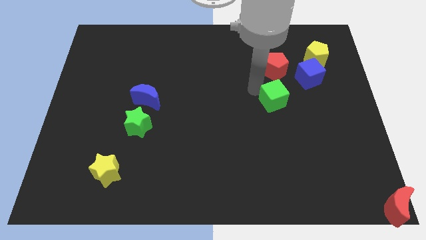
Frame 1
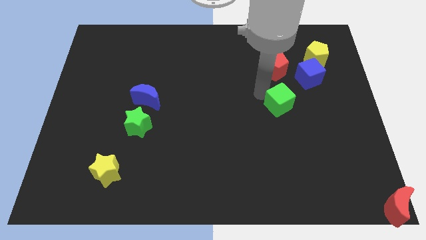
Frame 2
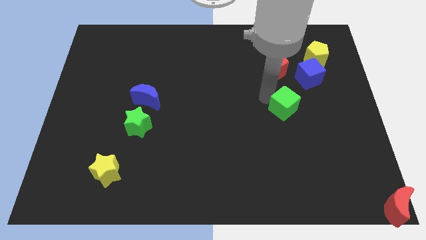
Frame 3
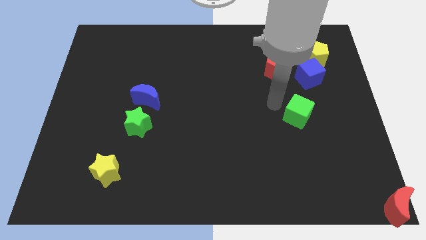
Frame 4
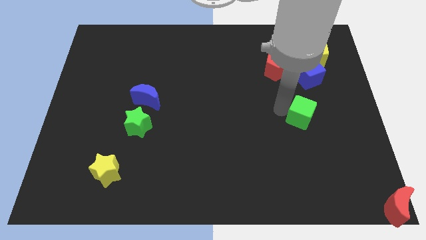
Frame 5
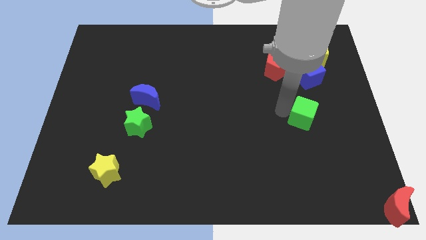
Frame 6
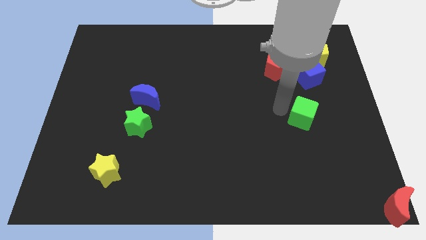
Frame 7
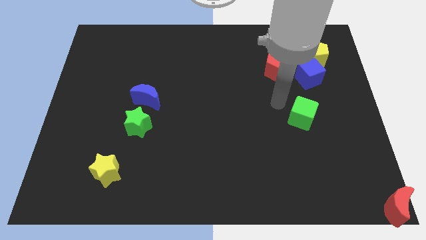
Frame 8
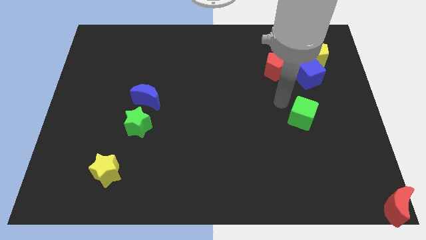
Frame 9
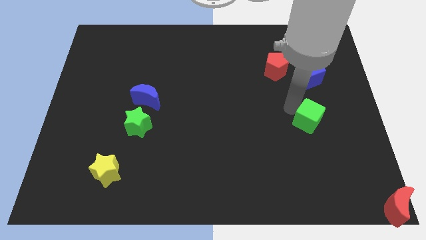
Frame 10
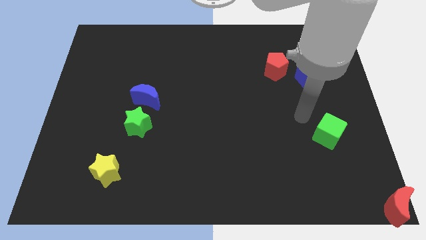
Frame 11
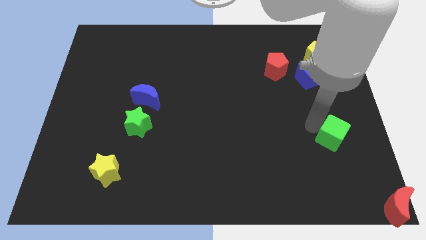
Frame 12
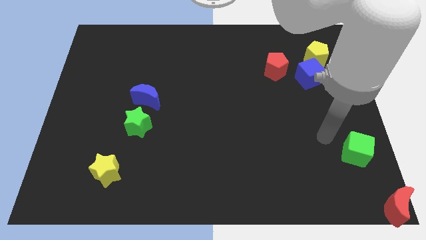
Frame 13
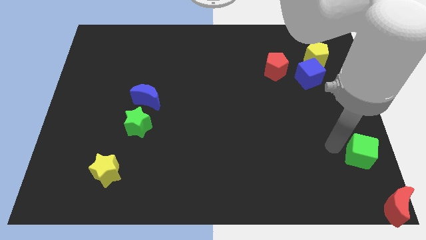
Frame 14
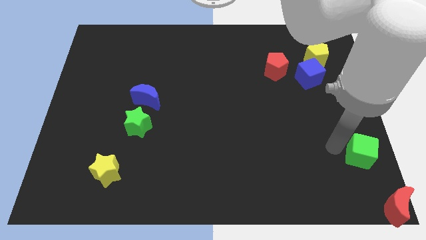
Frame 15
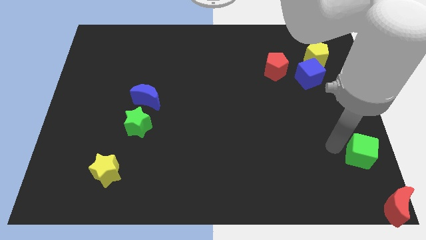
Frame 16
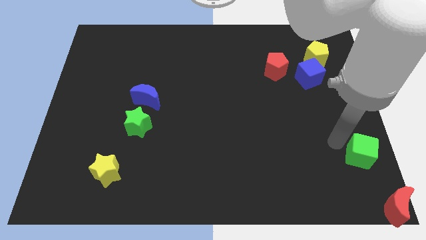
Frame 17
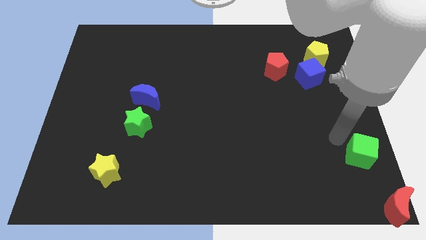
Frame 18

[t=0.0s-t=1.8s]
push the green cube towards the red moon

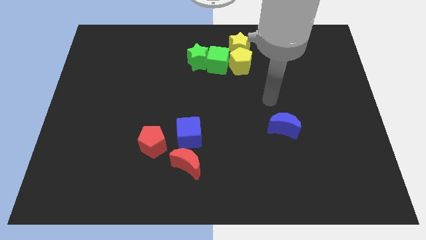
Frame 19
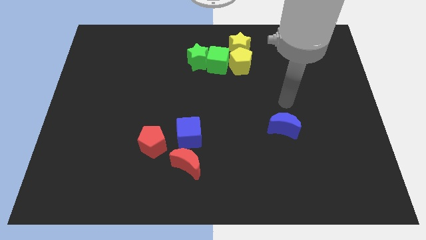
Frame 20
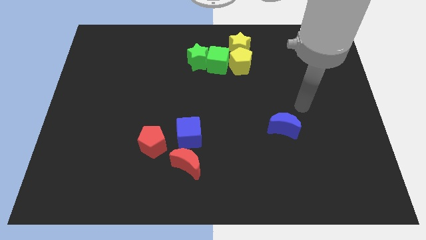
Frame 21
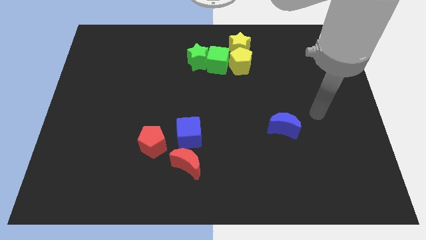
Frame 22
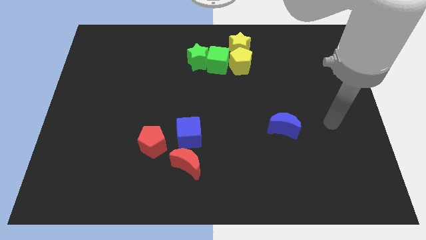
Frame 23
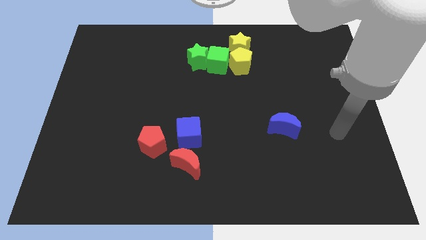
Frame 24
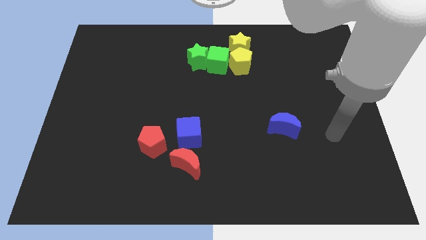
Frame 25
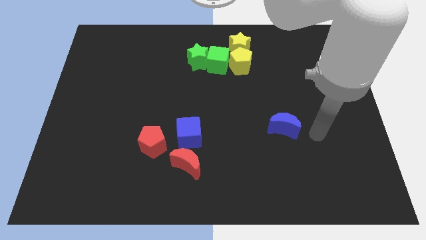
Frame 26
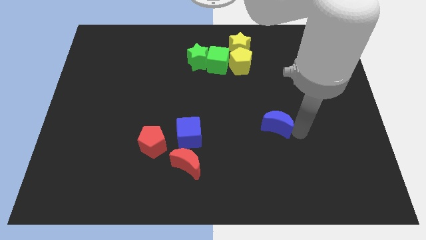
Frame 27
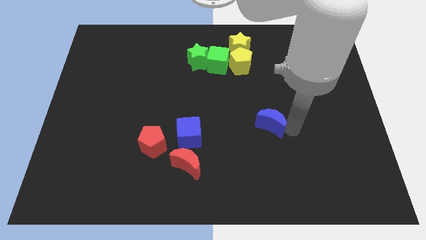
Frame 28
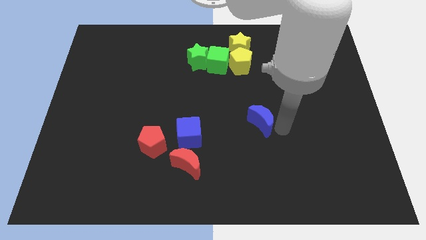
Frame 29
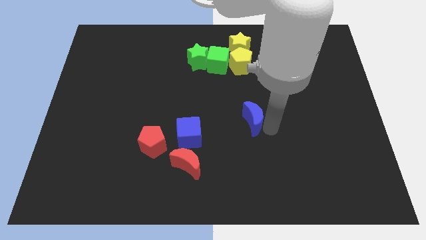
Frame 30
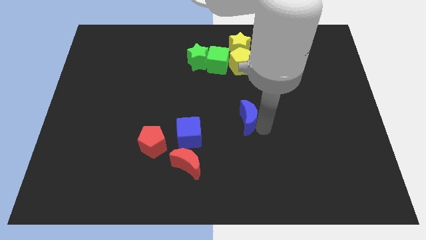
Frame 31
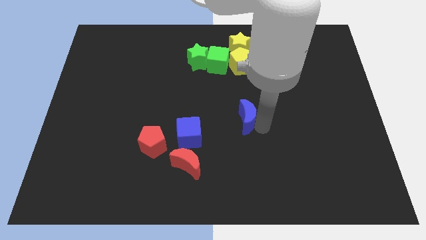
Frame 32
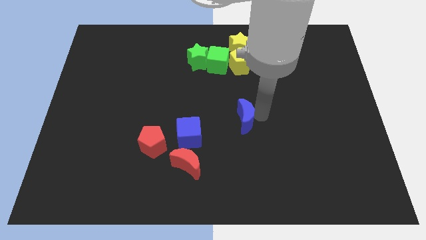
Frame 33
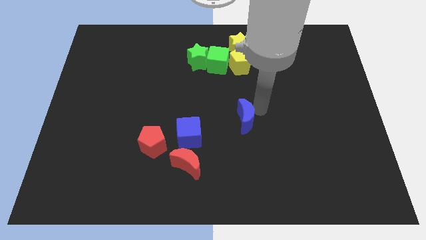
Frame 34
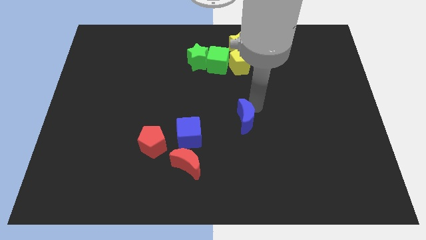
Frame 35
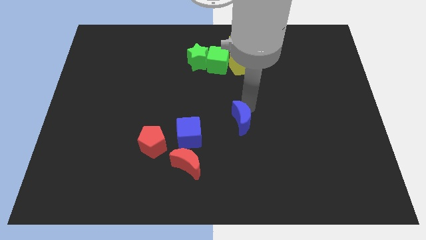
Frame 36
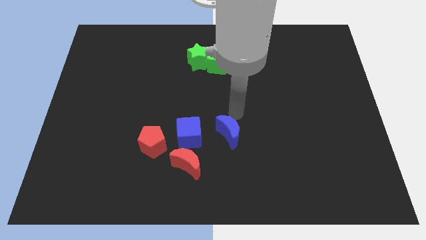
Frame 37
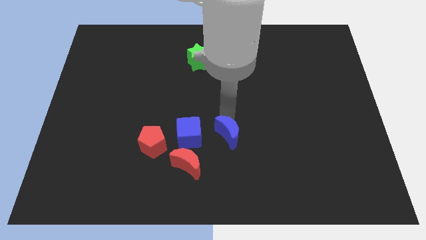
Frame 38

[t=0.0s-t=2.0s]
push the blue moon to the right of blue cube

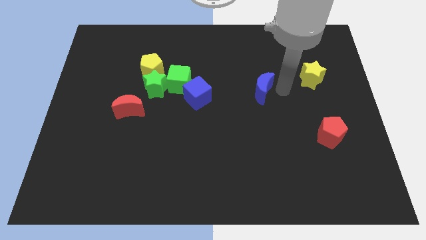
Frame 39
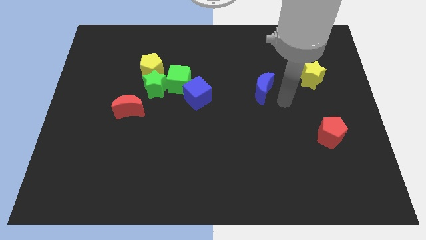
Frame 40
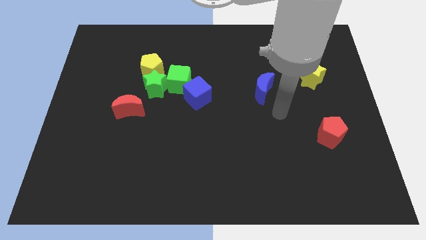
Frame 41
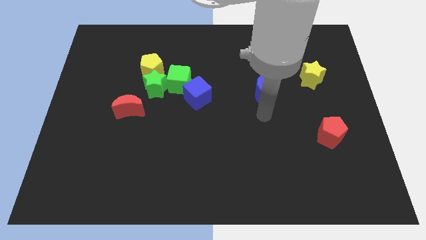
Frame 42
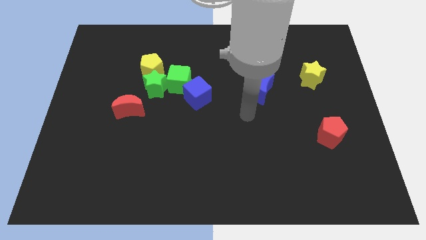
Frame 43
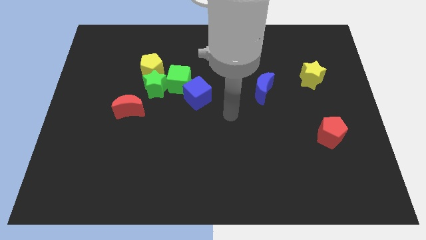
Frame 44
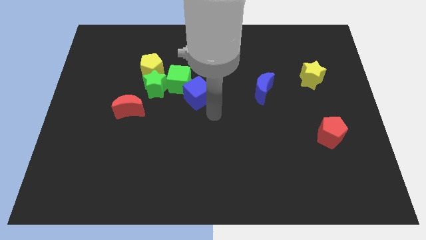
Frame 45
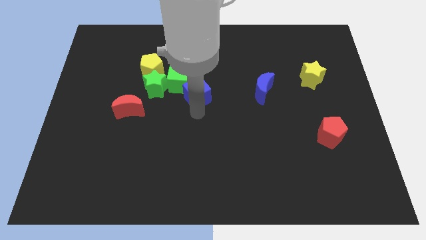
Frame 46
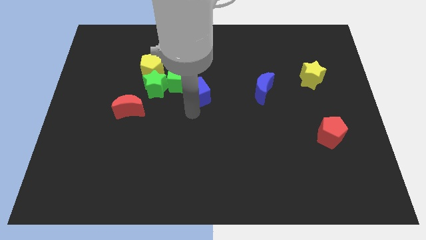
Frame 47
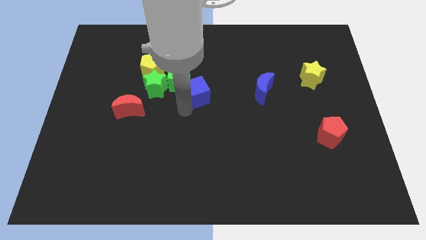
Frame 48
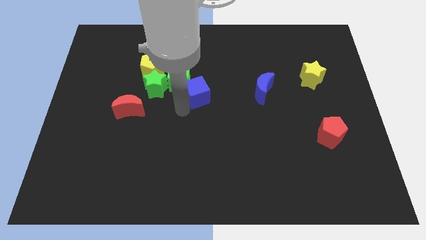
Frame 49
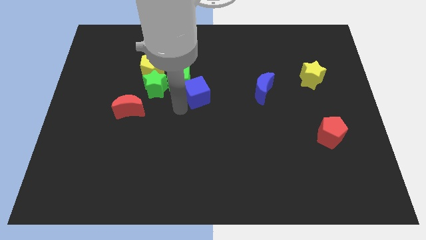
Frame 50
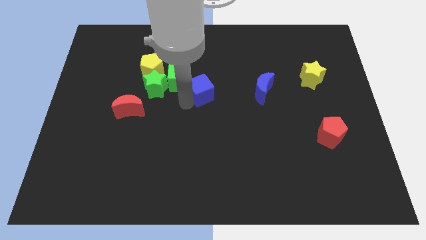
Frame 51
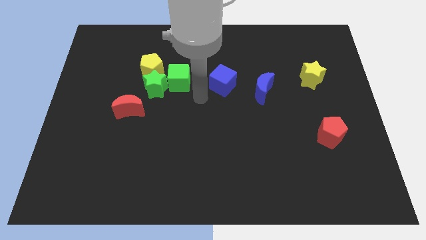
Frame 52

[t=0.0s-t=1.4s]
move the blue cube parallel to the green cube

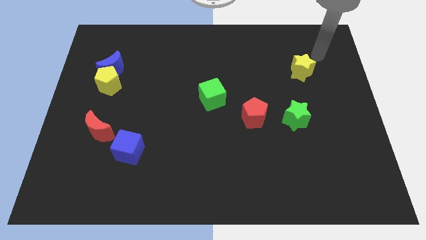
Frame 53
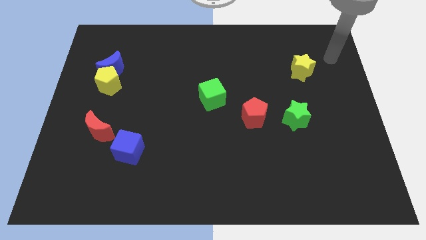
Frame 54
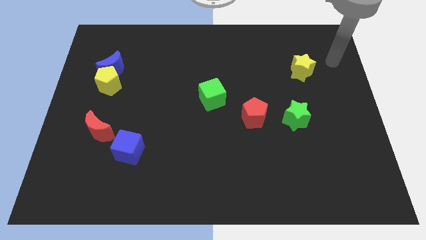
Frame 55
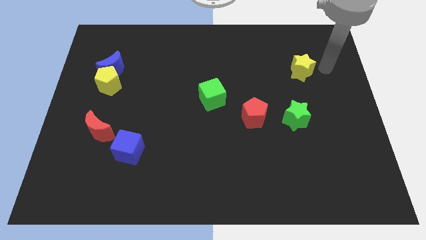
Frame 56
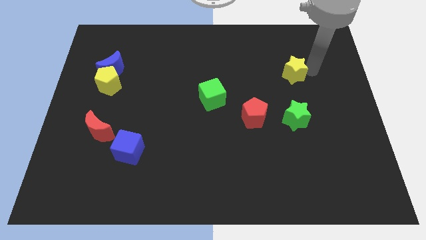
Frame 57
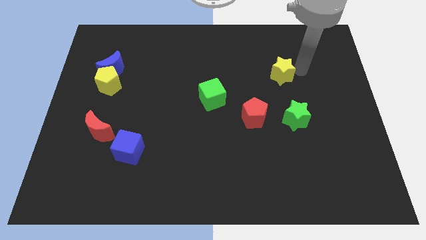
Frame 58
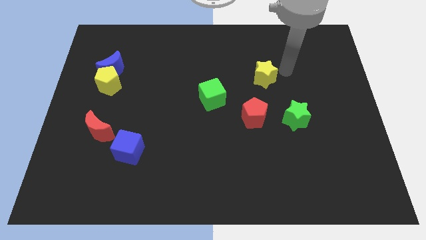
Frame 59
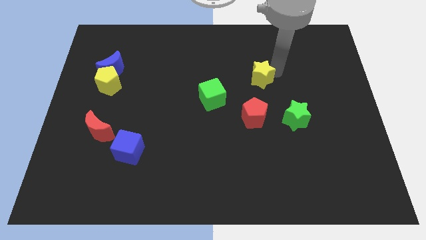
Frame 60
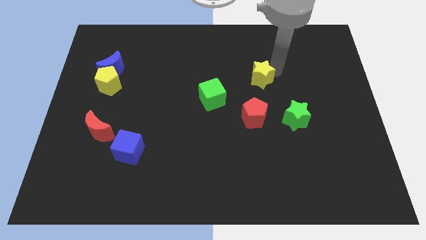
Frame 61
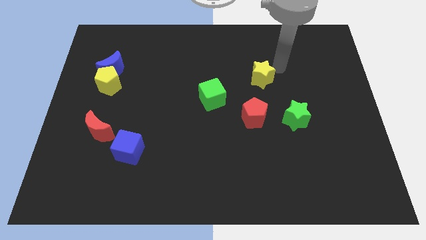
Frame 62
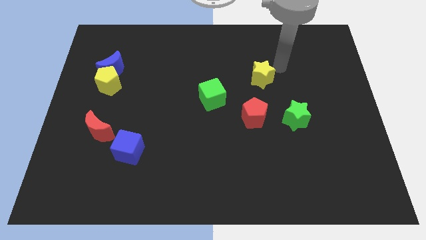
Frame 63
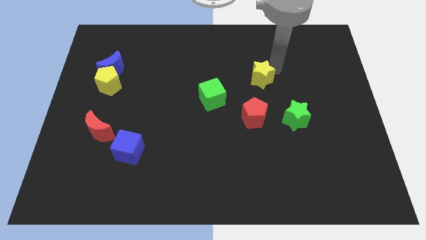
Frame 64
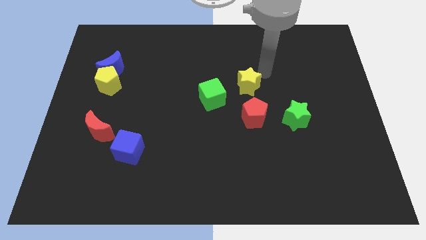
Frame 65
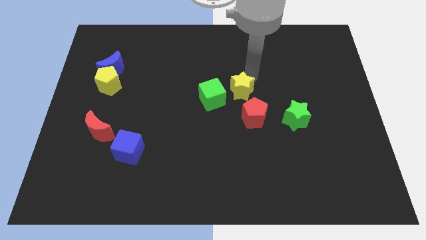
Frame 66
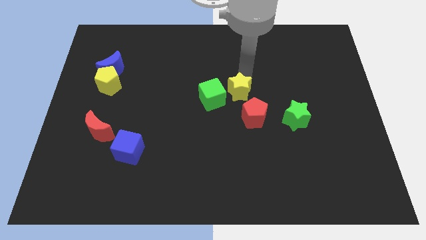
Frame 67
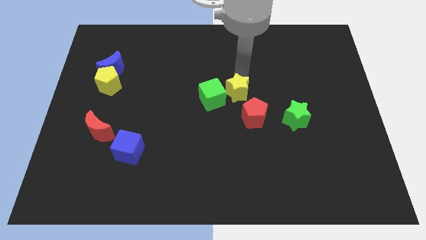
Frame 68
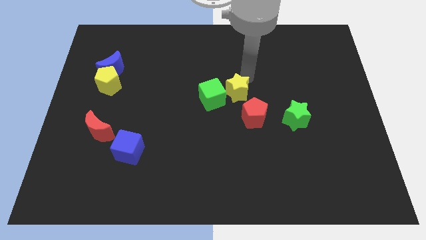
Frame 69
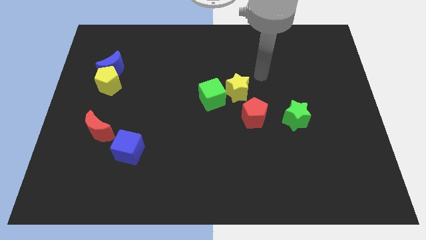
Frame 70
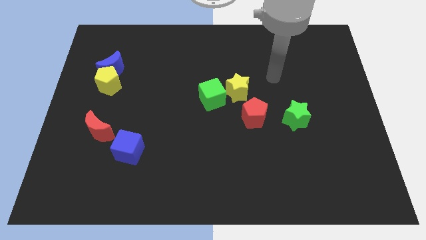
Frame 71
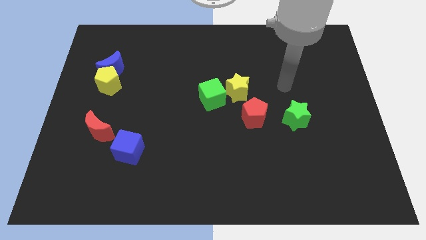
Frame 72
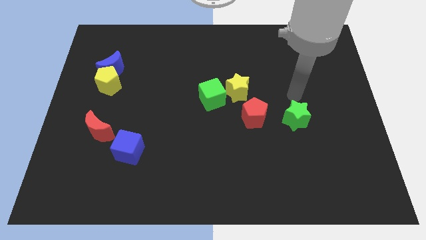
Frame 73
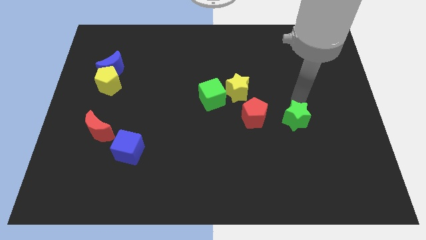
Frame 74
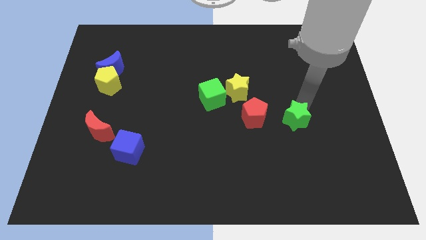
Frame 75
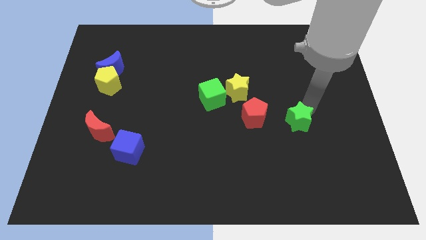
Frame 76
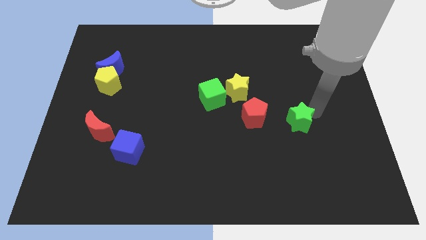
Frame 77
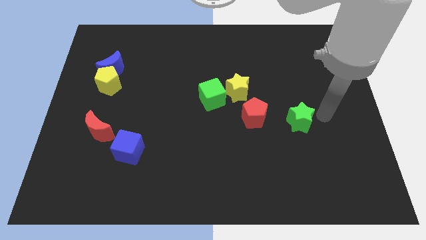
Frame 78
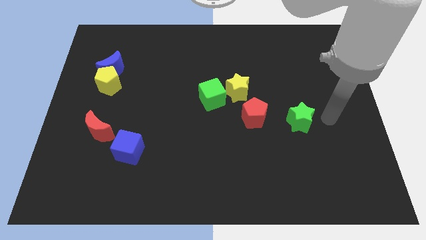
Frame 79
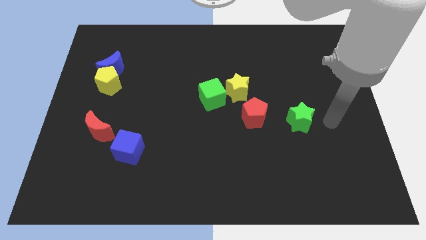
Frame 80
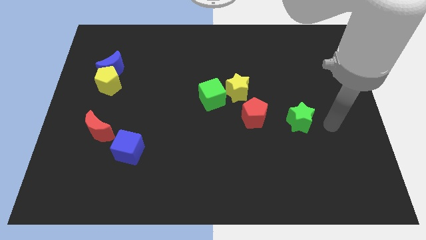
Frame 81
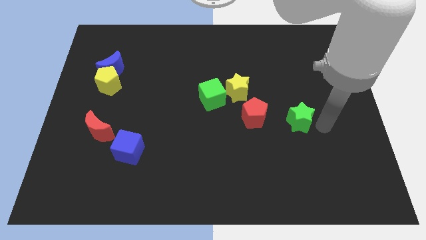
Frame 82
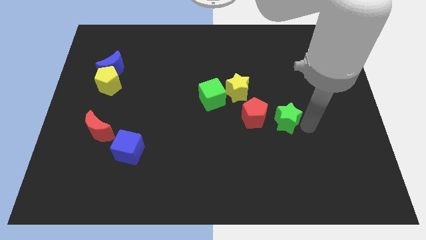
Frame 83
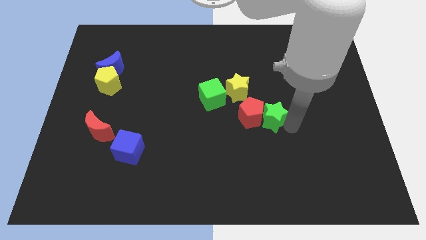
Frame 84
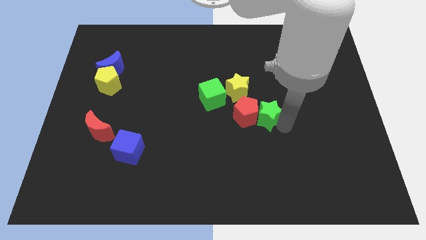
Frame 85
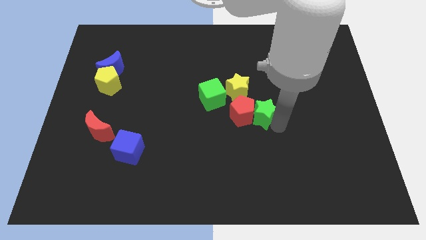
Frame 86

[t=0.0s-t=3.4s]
slide the green star into the red pentagon

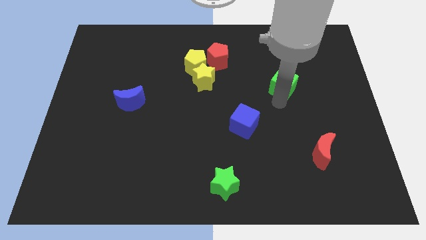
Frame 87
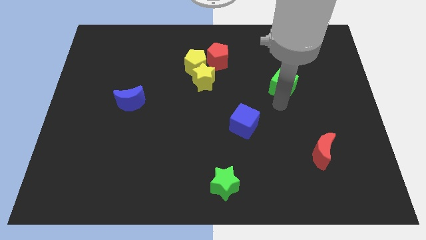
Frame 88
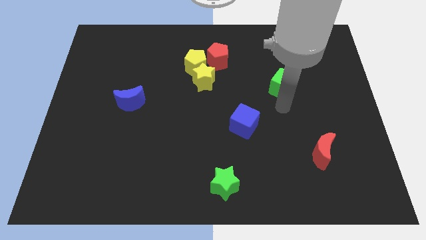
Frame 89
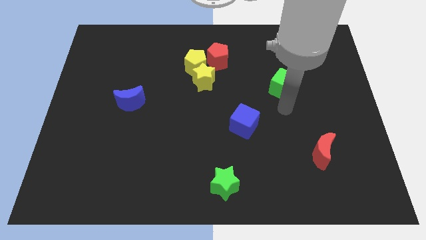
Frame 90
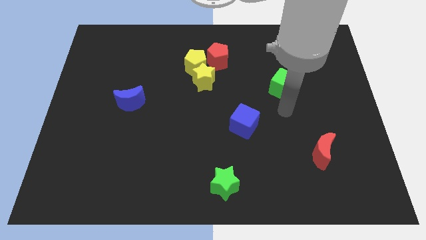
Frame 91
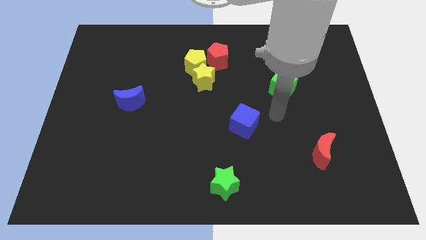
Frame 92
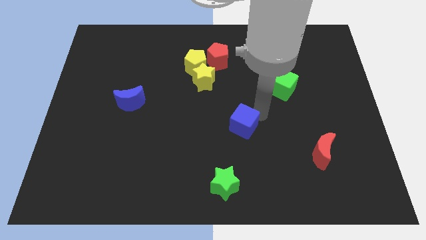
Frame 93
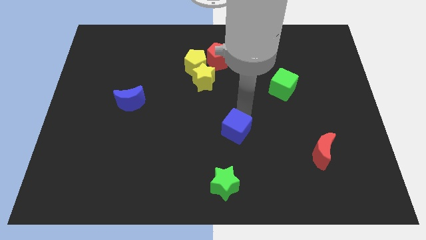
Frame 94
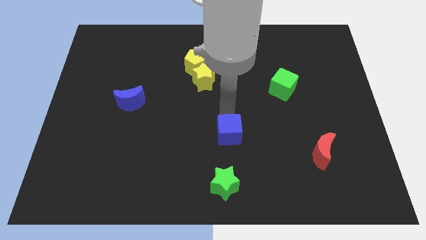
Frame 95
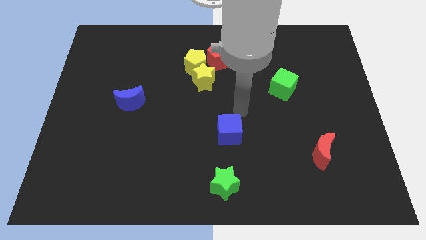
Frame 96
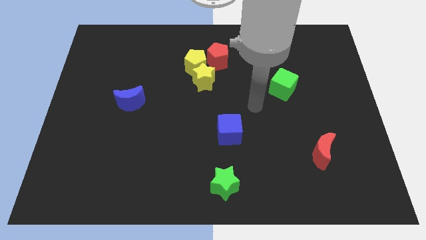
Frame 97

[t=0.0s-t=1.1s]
push the blue cube slightly to the bottom
